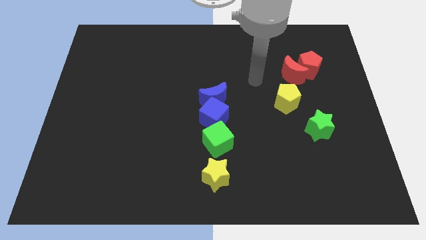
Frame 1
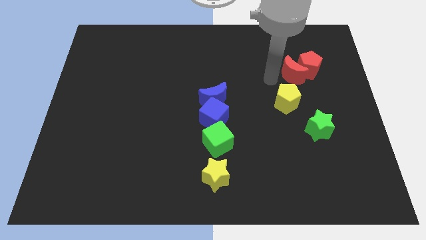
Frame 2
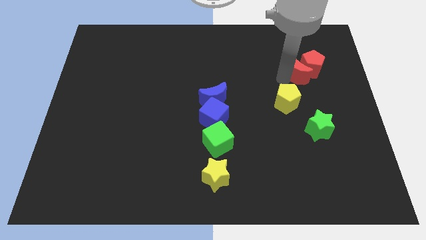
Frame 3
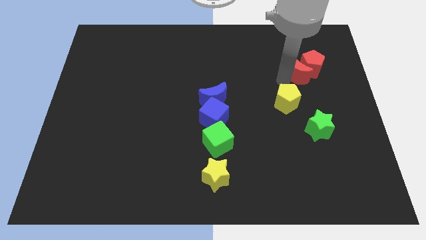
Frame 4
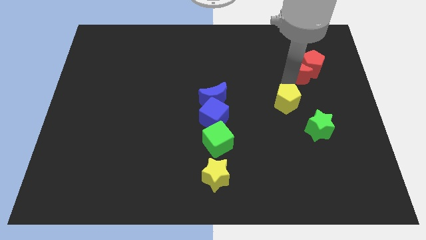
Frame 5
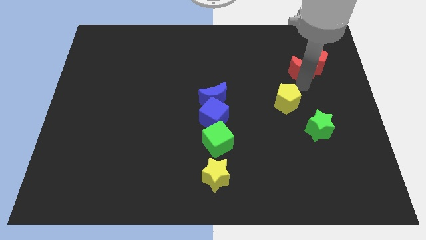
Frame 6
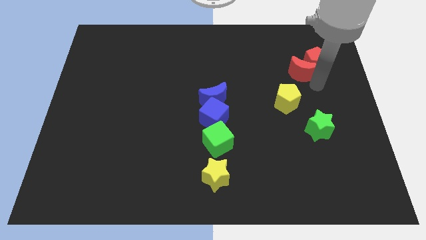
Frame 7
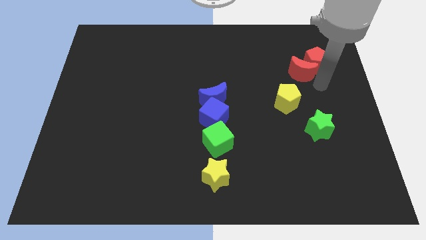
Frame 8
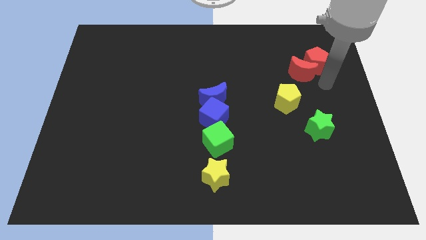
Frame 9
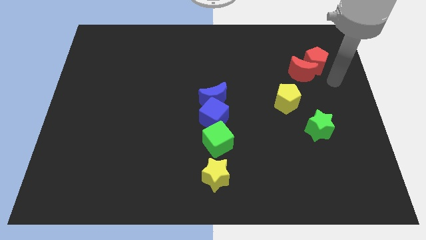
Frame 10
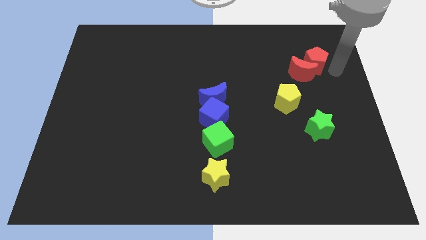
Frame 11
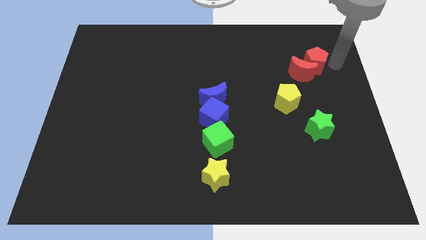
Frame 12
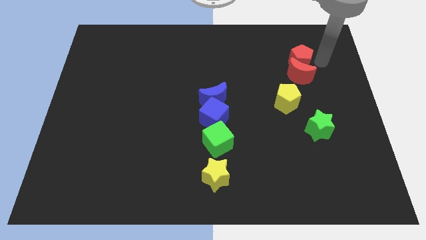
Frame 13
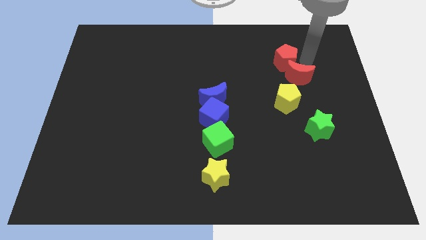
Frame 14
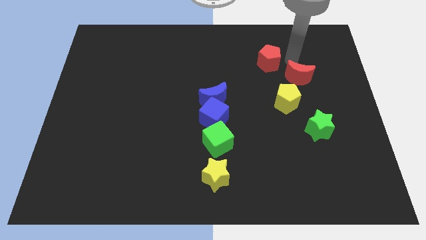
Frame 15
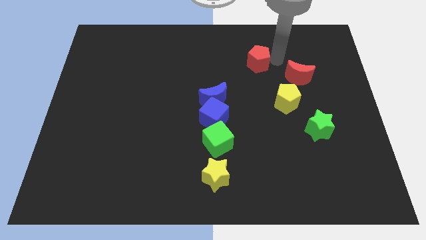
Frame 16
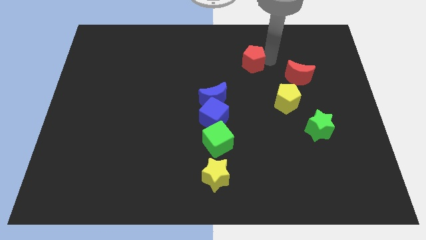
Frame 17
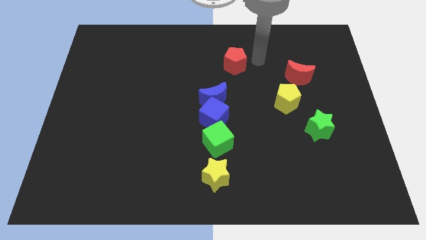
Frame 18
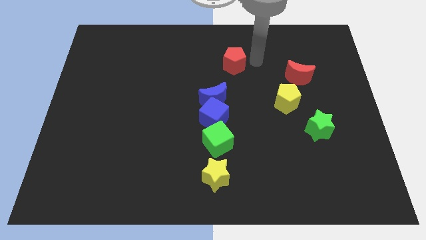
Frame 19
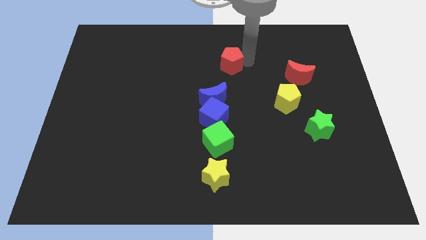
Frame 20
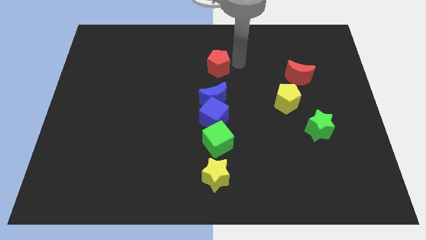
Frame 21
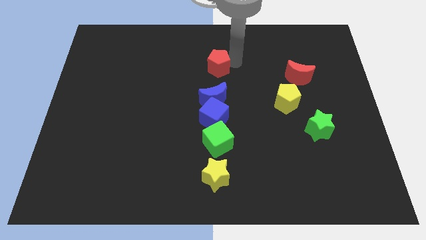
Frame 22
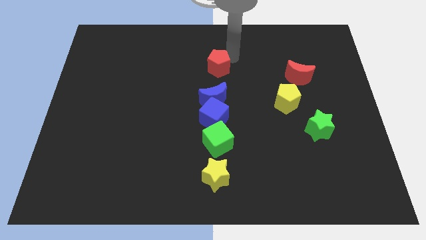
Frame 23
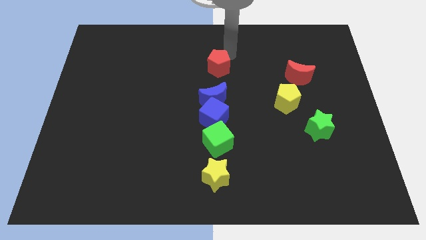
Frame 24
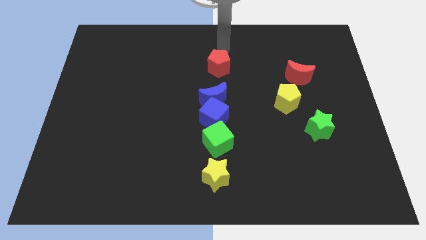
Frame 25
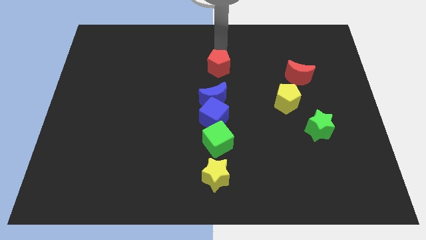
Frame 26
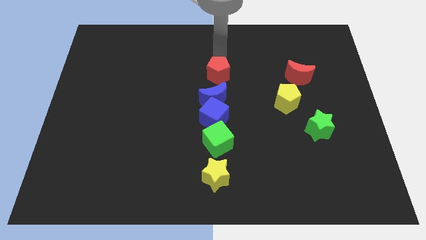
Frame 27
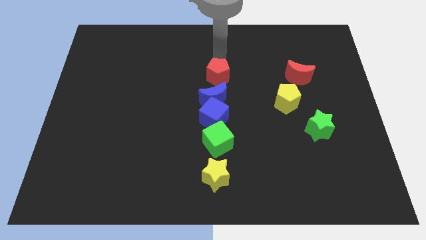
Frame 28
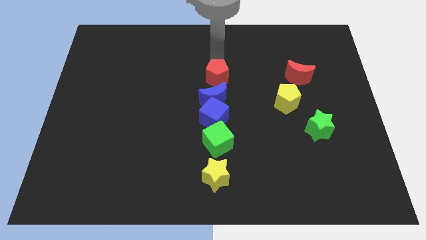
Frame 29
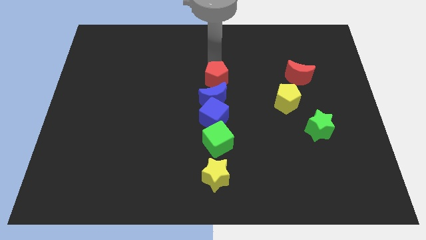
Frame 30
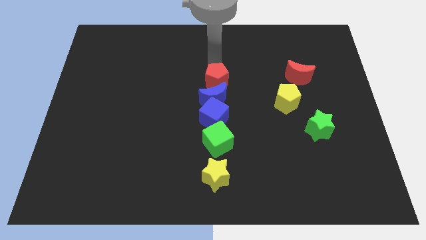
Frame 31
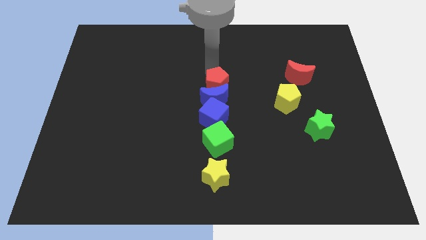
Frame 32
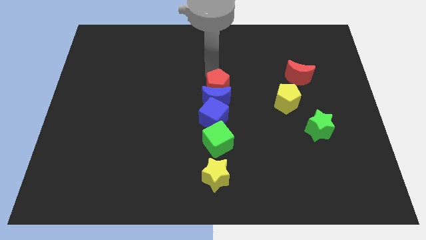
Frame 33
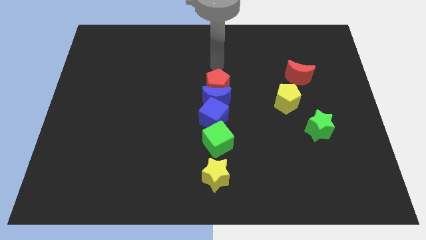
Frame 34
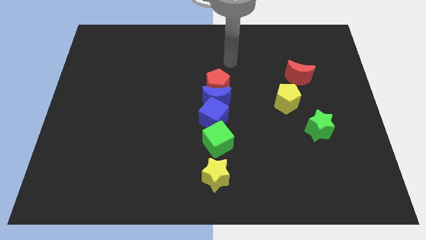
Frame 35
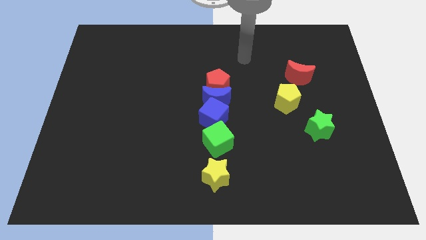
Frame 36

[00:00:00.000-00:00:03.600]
push the red pentagon on top of the blue crescent

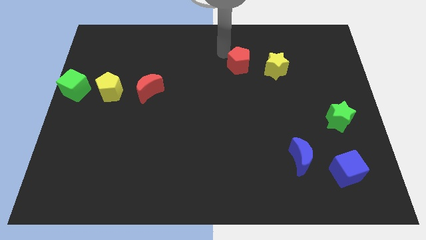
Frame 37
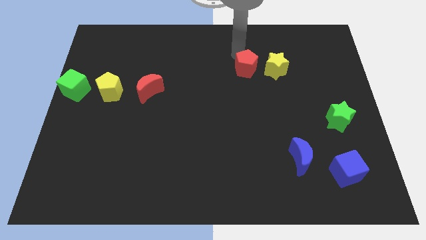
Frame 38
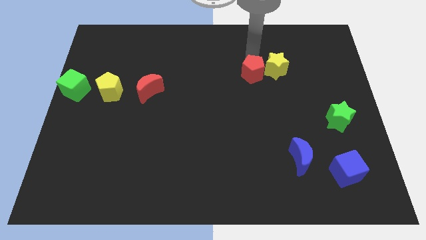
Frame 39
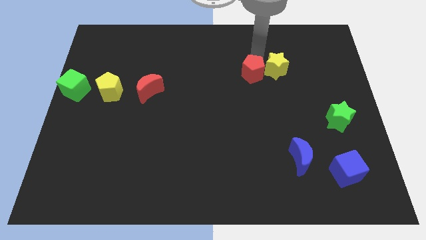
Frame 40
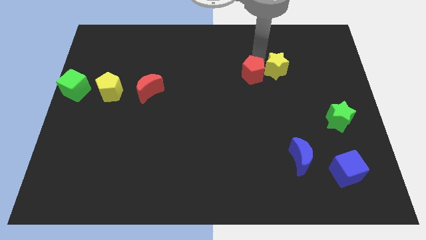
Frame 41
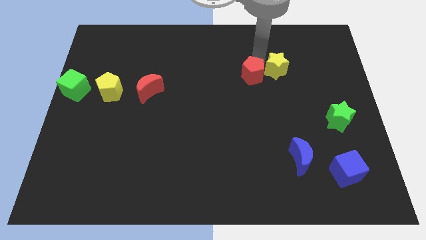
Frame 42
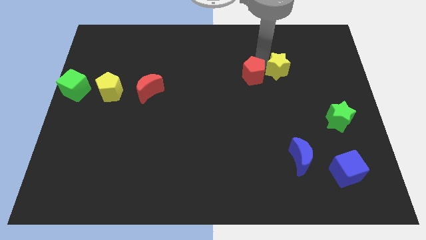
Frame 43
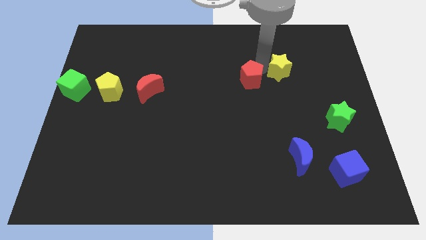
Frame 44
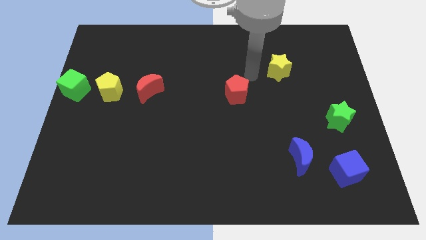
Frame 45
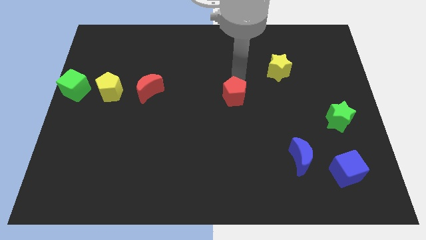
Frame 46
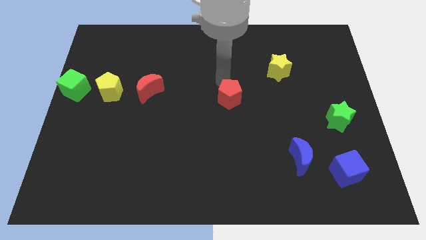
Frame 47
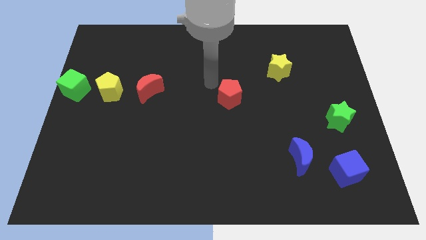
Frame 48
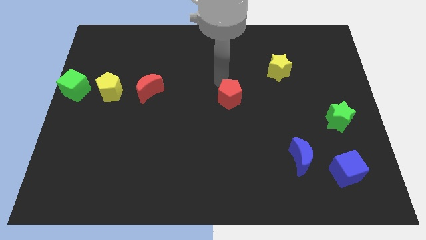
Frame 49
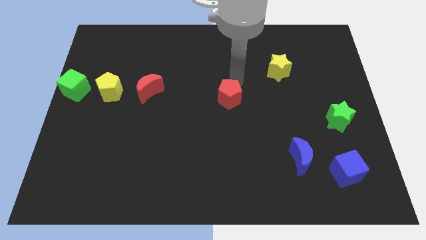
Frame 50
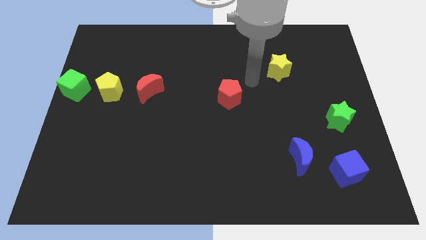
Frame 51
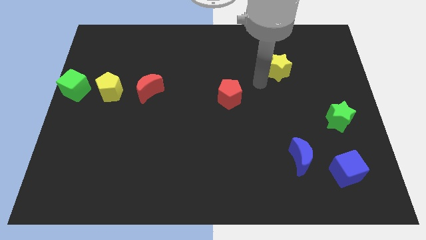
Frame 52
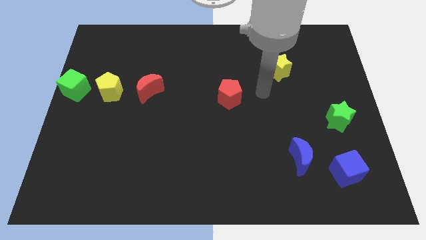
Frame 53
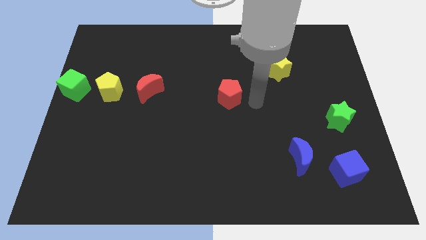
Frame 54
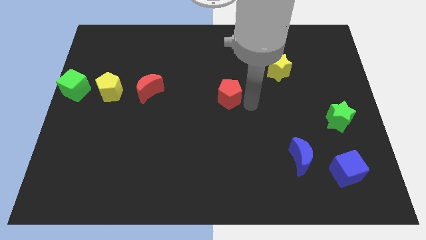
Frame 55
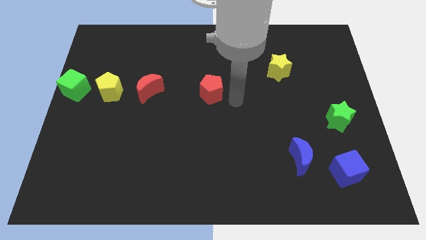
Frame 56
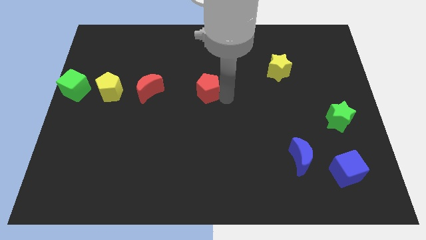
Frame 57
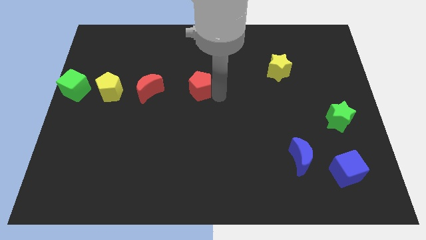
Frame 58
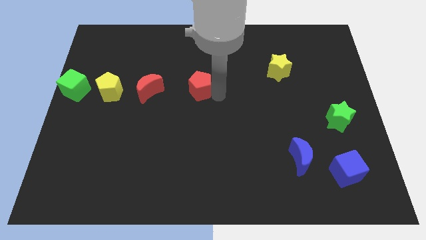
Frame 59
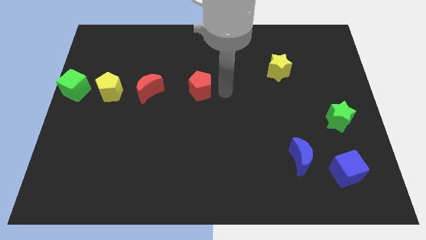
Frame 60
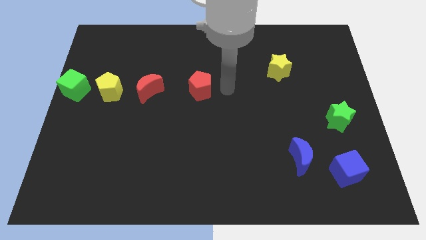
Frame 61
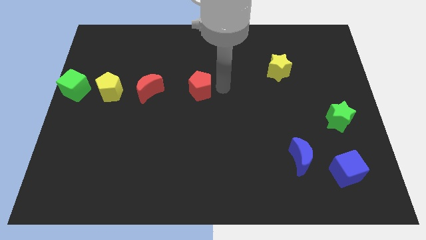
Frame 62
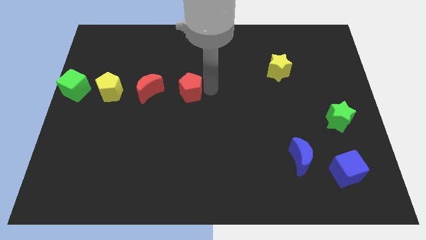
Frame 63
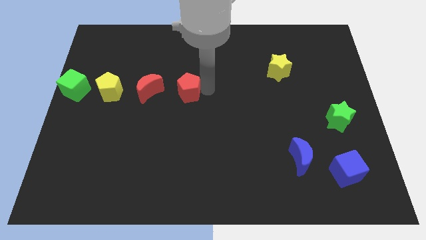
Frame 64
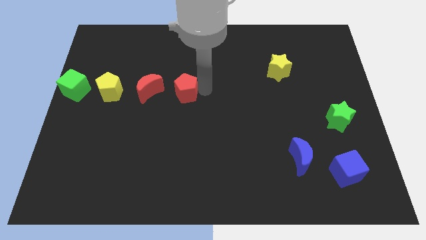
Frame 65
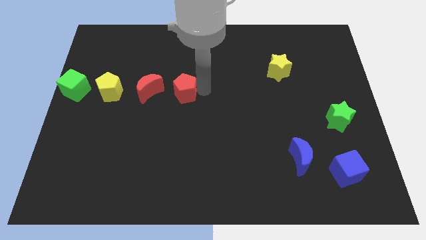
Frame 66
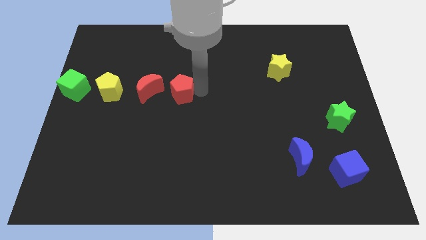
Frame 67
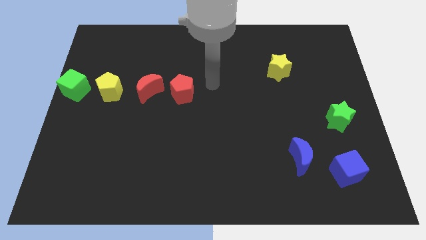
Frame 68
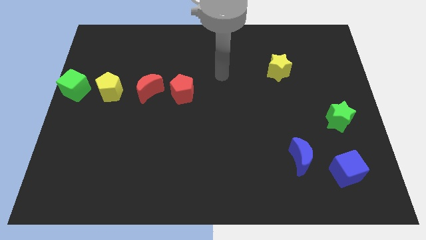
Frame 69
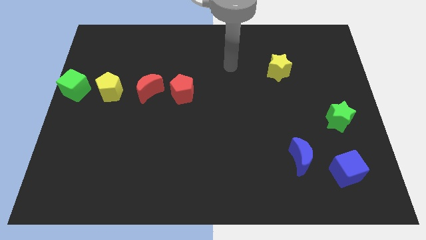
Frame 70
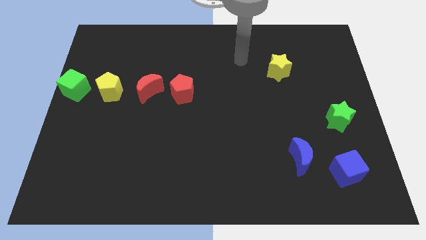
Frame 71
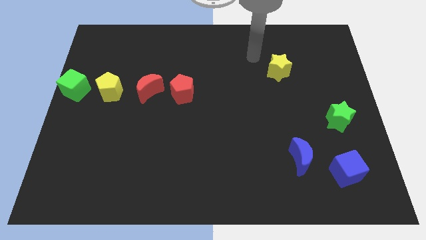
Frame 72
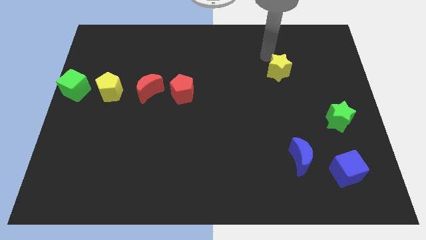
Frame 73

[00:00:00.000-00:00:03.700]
place the red pentagon to the right of the red crescent

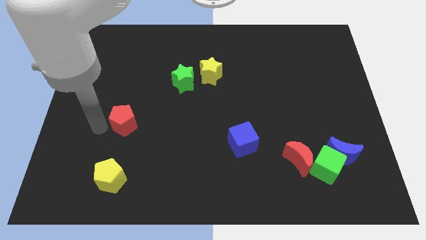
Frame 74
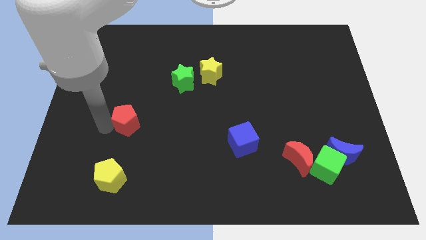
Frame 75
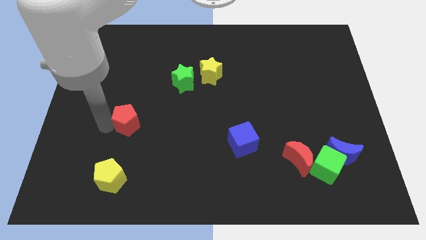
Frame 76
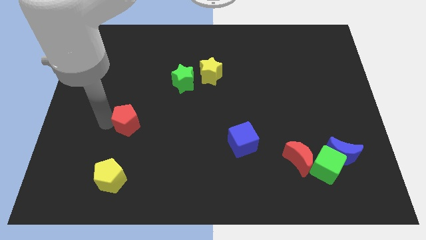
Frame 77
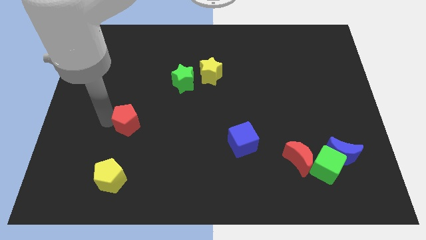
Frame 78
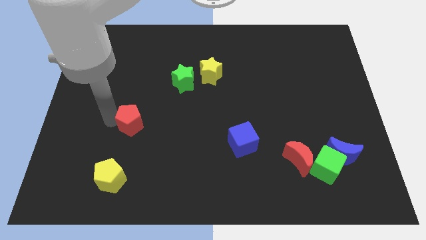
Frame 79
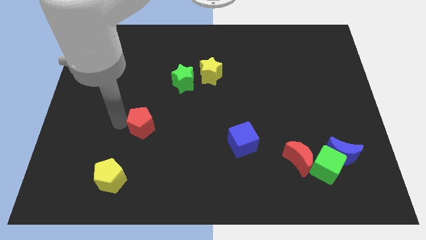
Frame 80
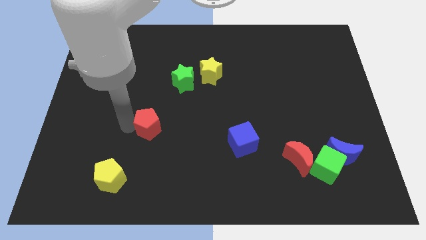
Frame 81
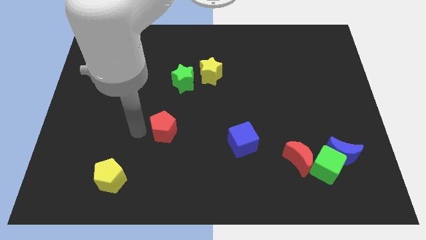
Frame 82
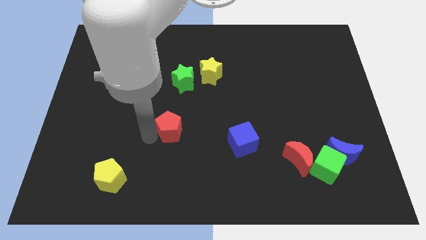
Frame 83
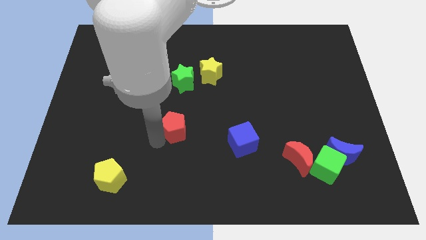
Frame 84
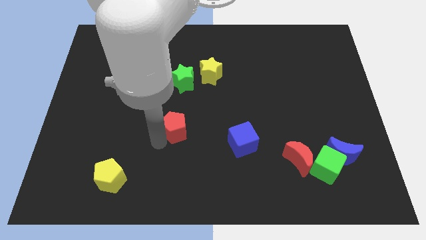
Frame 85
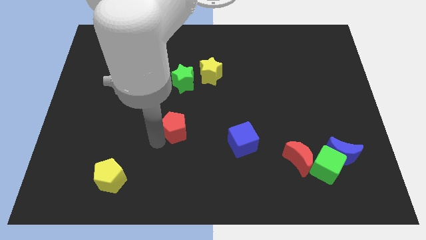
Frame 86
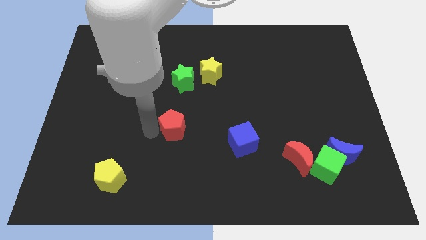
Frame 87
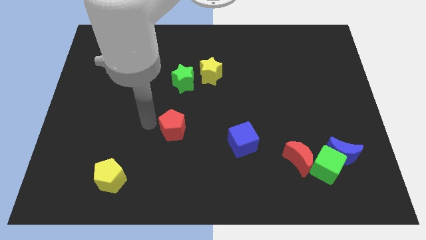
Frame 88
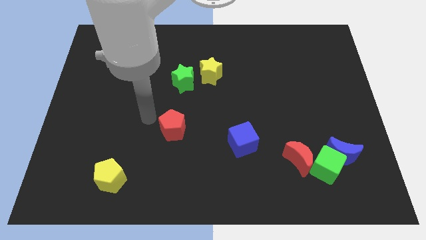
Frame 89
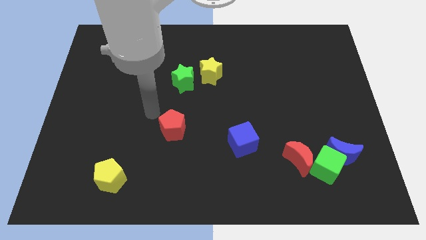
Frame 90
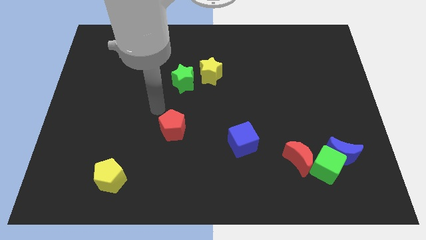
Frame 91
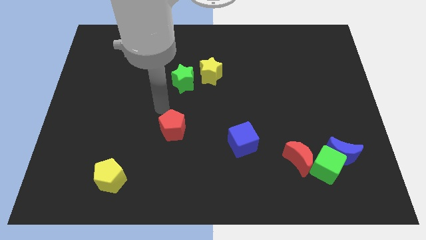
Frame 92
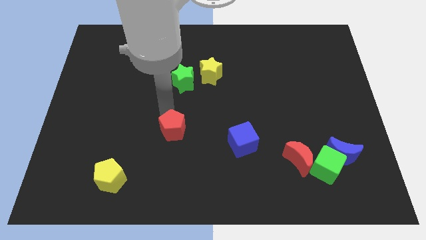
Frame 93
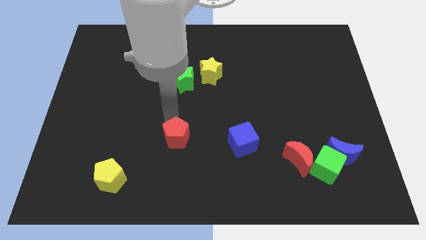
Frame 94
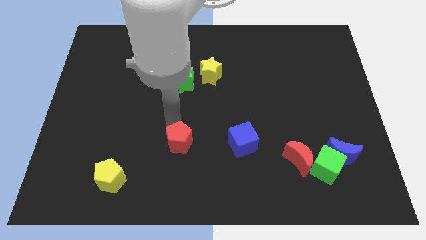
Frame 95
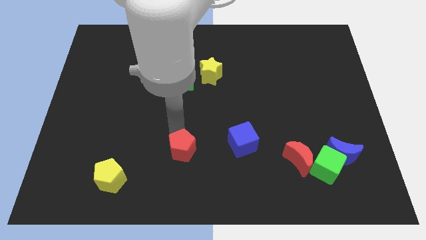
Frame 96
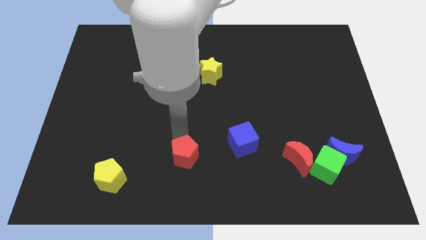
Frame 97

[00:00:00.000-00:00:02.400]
push the red pentagon diagonal to the yellow pentagon
